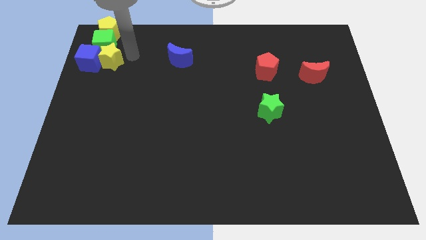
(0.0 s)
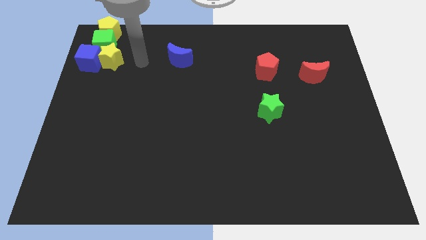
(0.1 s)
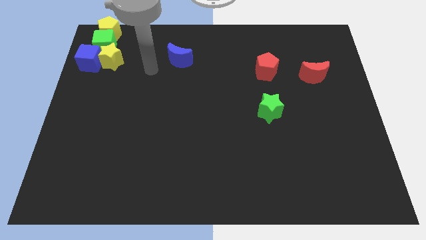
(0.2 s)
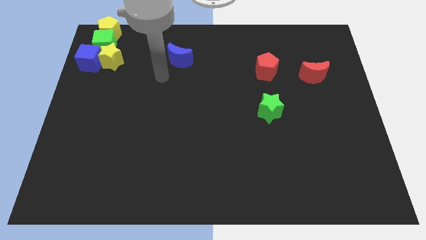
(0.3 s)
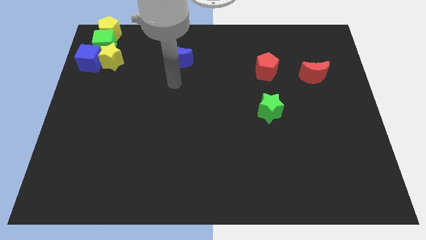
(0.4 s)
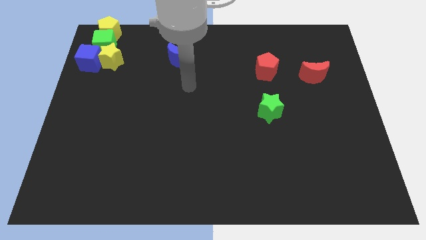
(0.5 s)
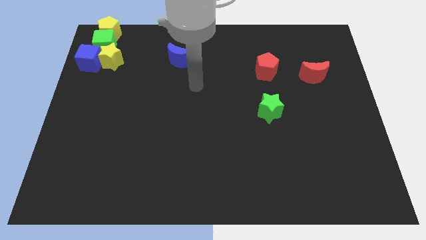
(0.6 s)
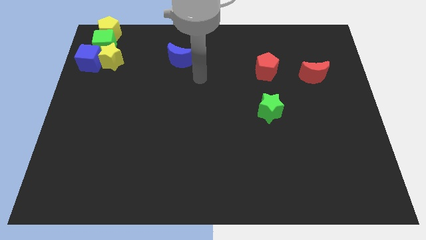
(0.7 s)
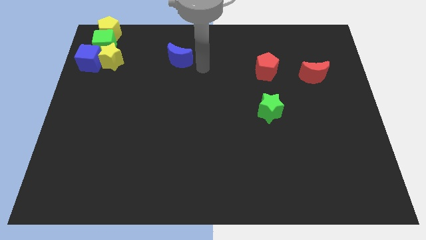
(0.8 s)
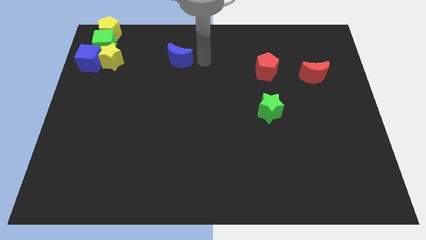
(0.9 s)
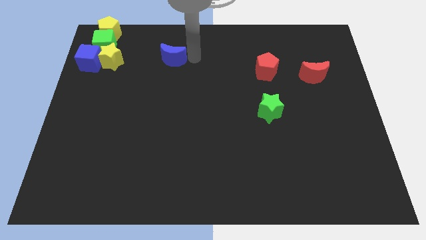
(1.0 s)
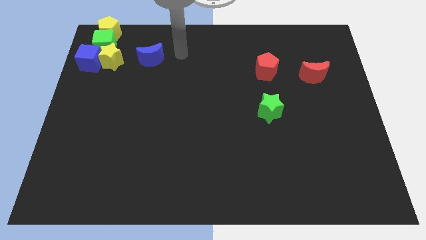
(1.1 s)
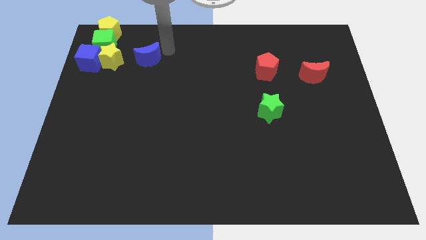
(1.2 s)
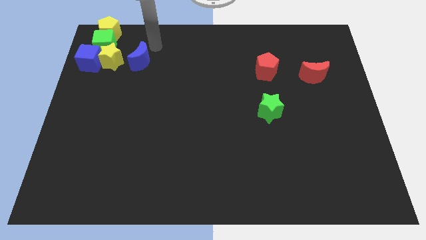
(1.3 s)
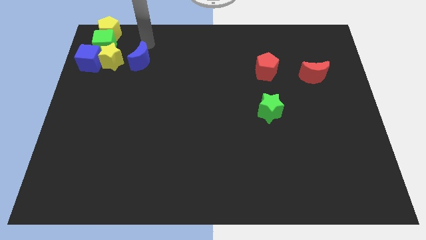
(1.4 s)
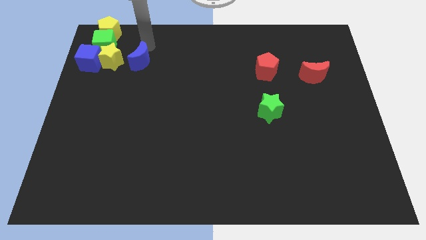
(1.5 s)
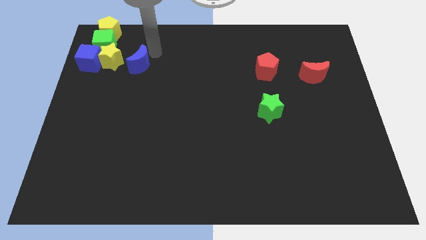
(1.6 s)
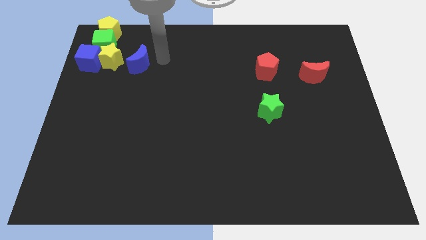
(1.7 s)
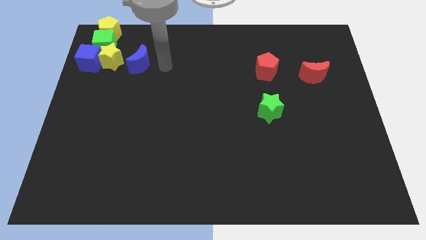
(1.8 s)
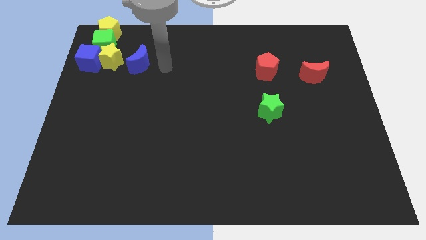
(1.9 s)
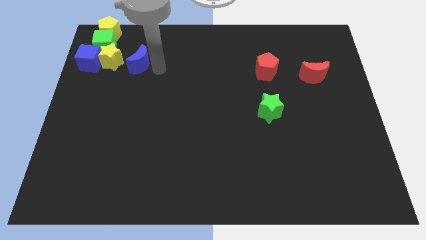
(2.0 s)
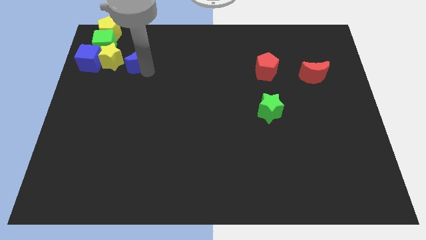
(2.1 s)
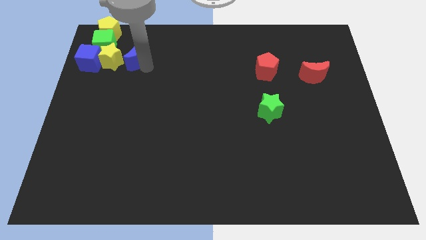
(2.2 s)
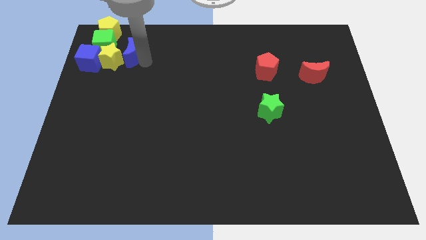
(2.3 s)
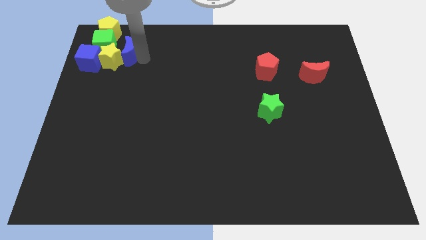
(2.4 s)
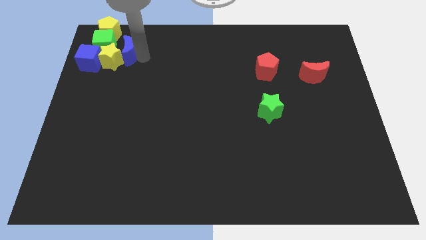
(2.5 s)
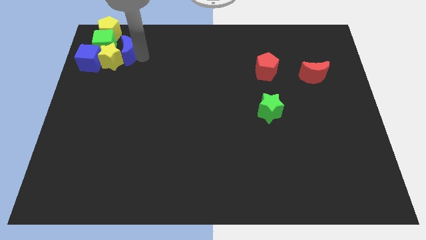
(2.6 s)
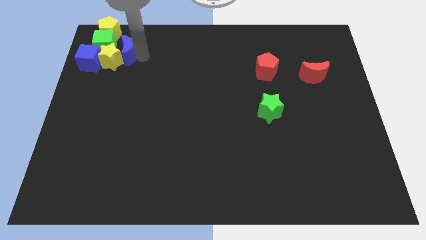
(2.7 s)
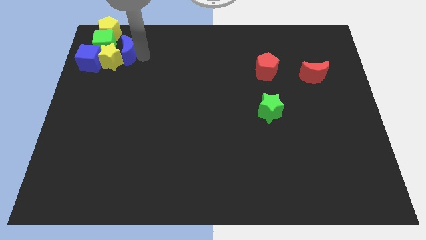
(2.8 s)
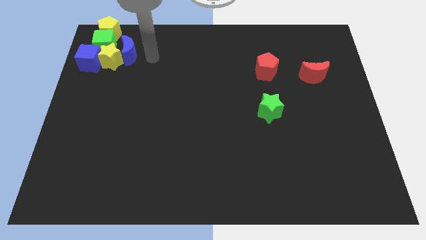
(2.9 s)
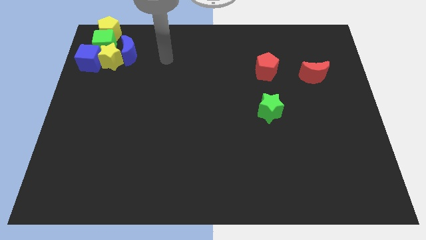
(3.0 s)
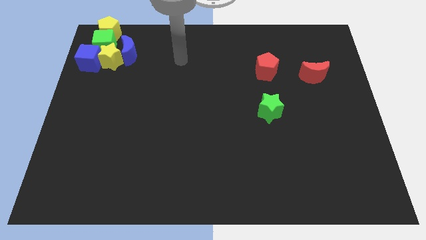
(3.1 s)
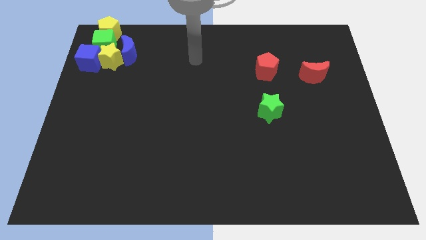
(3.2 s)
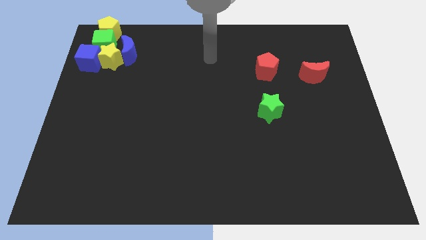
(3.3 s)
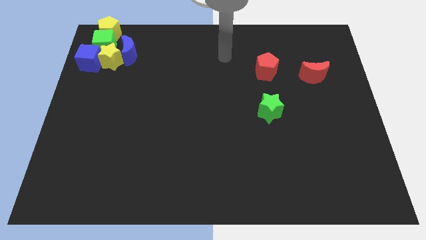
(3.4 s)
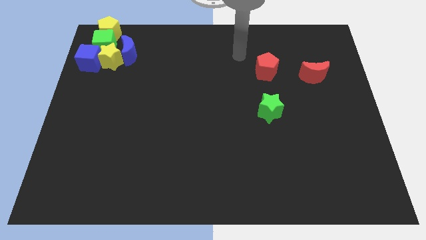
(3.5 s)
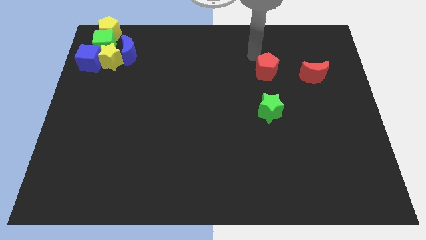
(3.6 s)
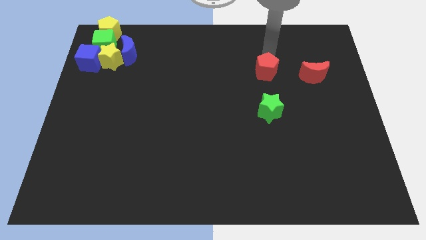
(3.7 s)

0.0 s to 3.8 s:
push the blue moon to the right side of the yellow star

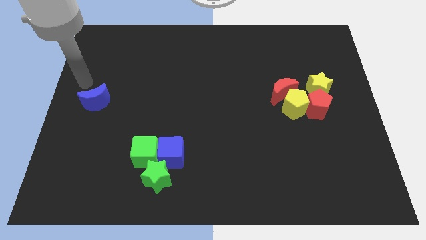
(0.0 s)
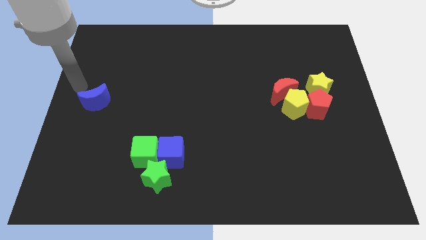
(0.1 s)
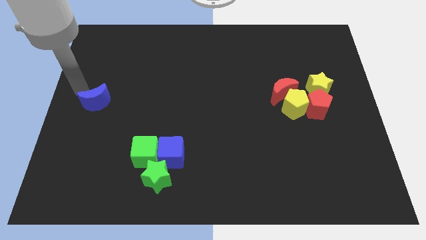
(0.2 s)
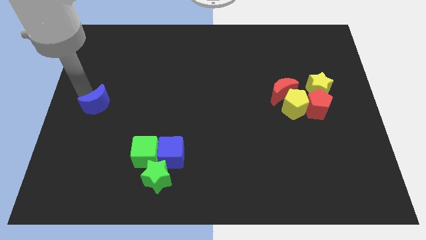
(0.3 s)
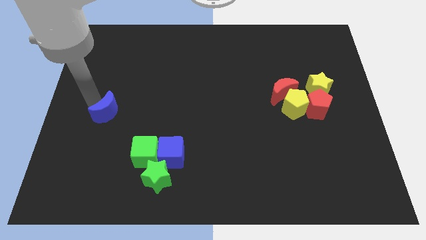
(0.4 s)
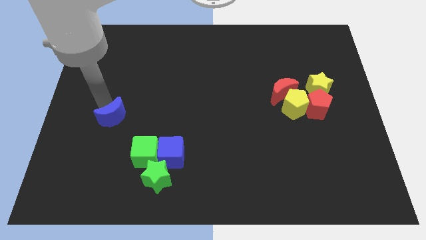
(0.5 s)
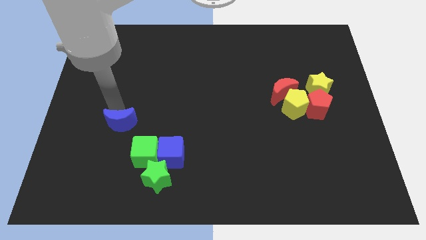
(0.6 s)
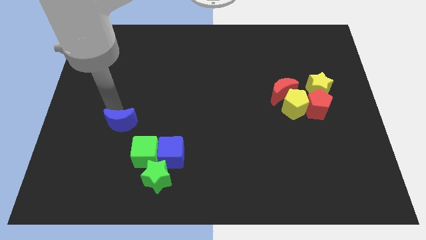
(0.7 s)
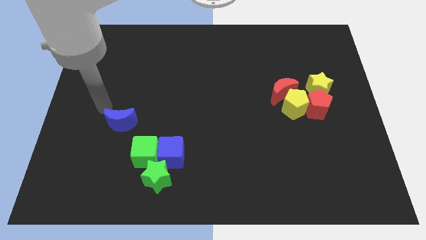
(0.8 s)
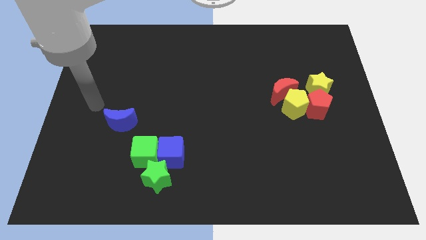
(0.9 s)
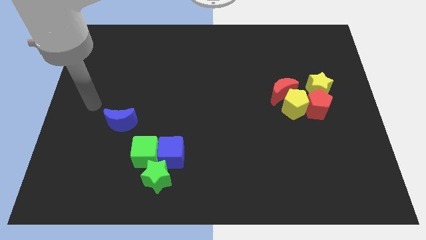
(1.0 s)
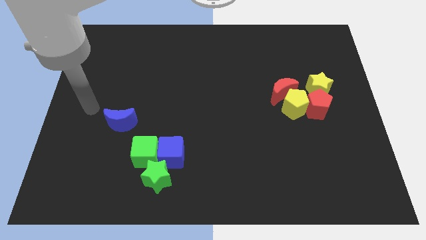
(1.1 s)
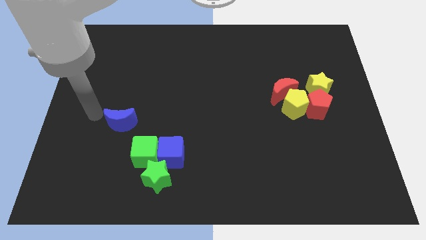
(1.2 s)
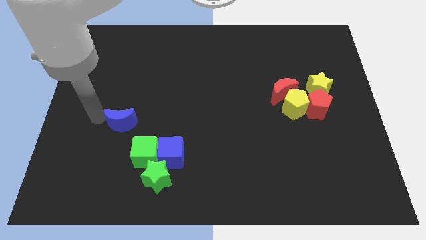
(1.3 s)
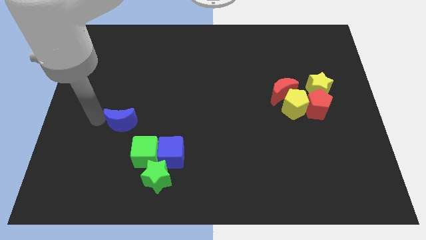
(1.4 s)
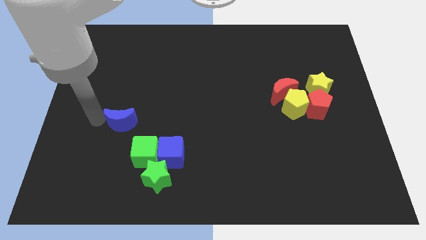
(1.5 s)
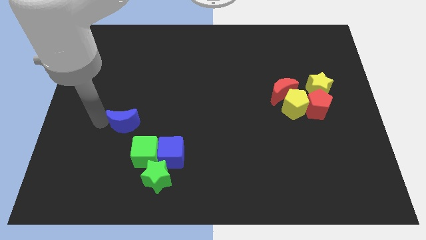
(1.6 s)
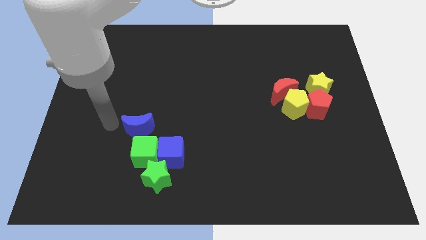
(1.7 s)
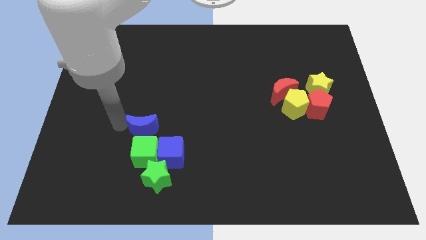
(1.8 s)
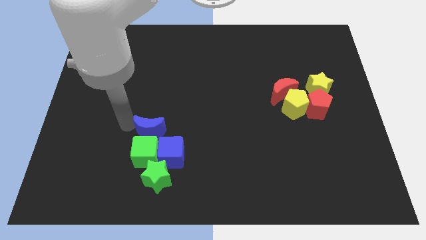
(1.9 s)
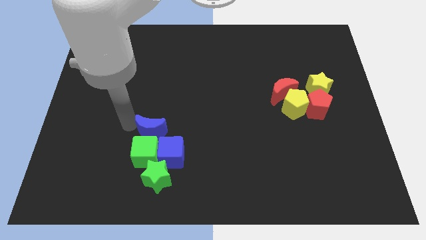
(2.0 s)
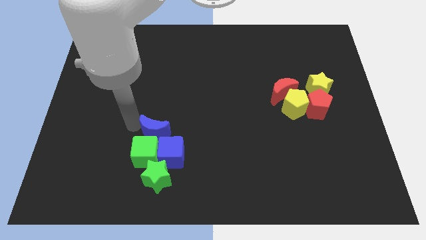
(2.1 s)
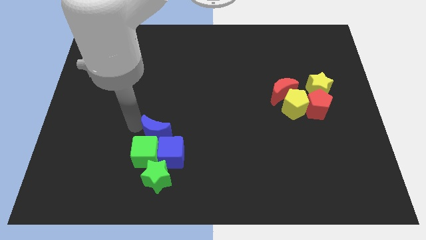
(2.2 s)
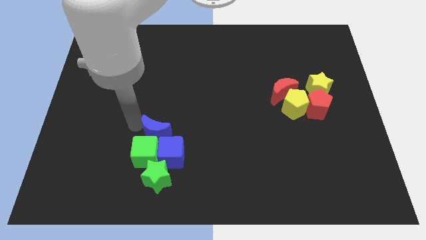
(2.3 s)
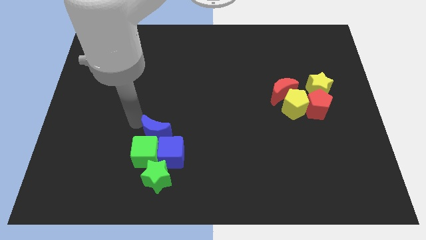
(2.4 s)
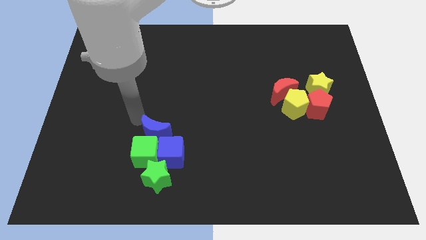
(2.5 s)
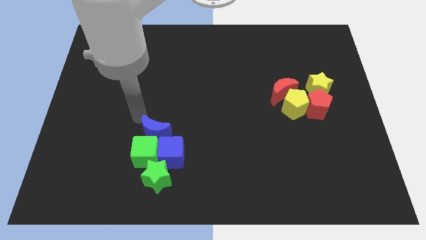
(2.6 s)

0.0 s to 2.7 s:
move the blue moon to the top of blue cube and green cube

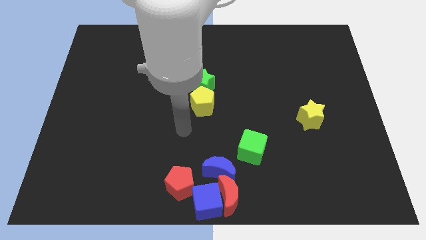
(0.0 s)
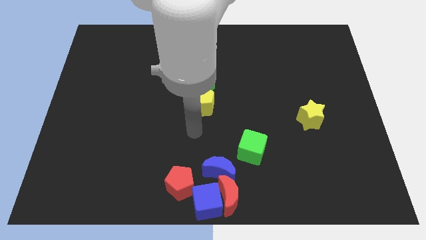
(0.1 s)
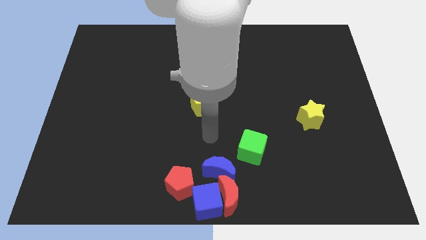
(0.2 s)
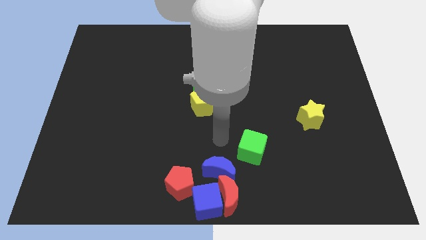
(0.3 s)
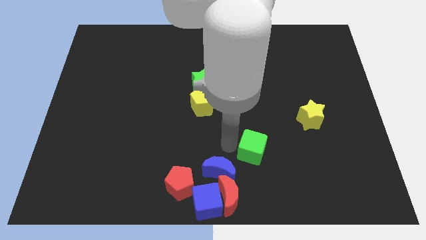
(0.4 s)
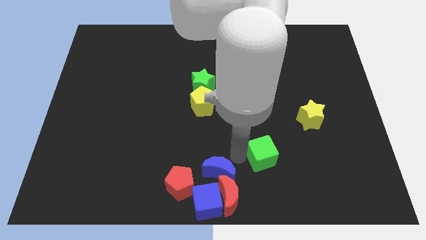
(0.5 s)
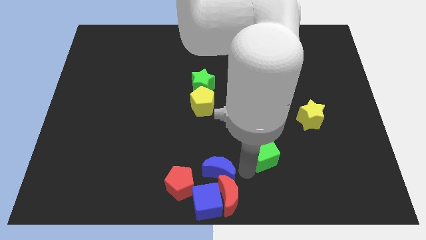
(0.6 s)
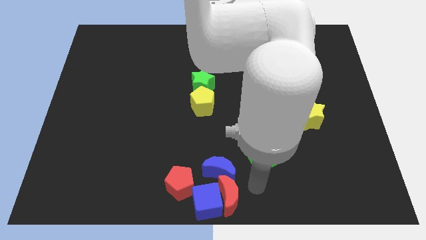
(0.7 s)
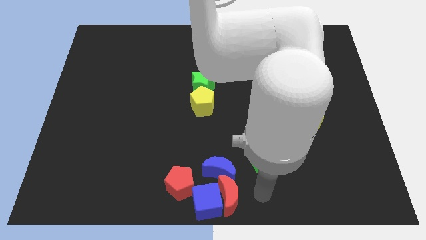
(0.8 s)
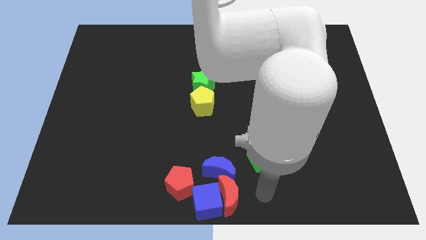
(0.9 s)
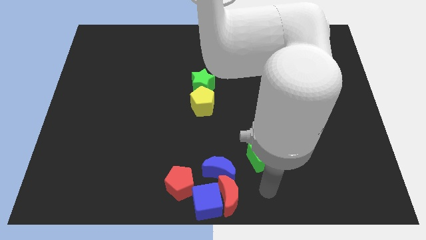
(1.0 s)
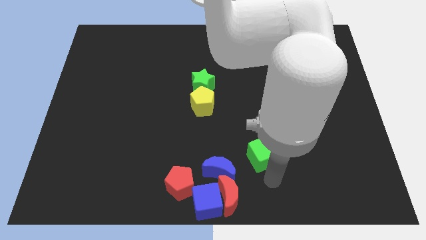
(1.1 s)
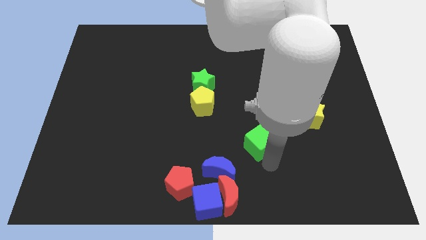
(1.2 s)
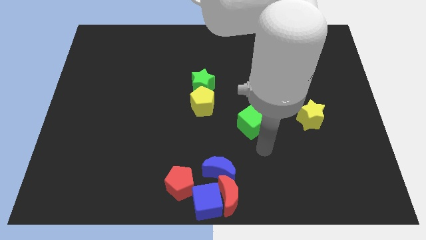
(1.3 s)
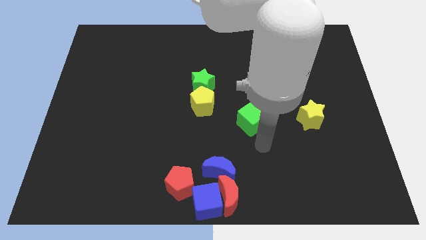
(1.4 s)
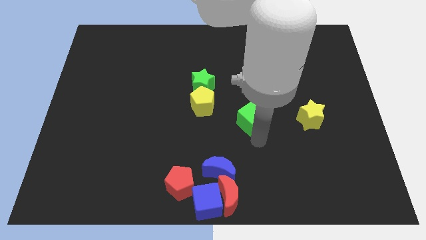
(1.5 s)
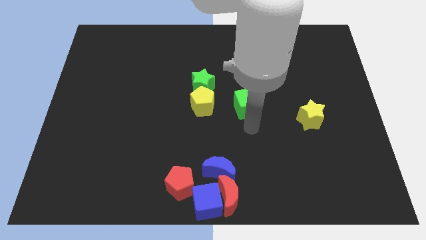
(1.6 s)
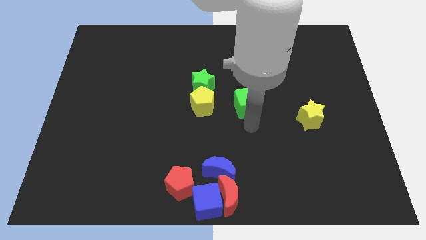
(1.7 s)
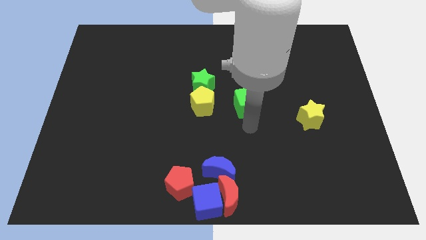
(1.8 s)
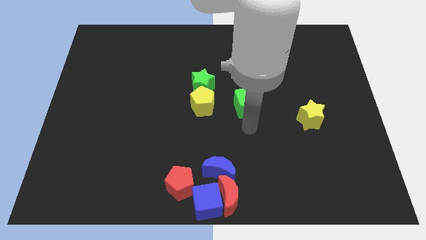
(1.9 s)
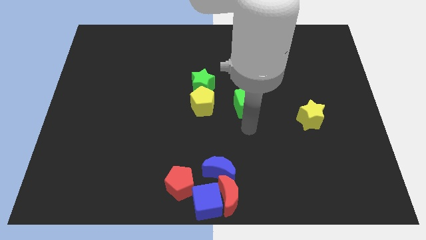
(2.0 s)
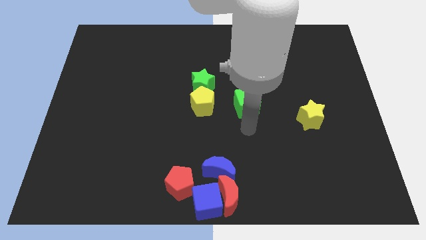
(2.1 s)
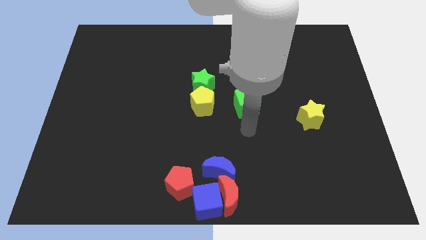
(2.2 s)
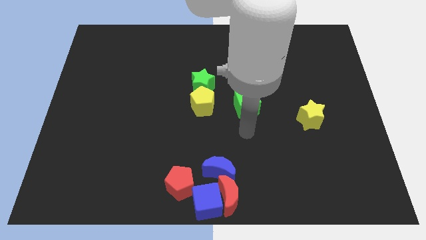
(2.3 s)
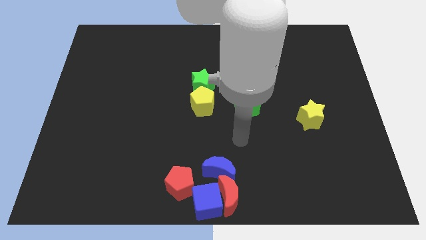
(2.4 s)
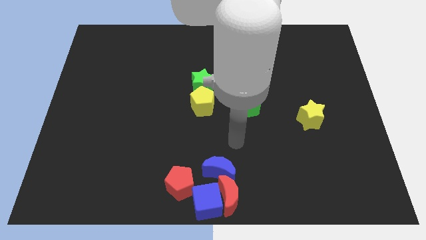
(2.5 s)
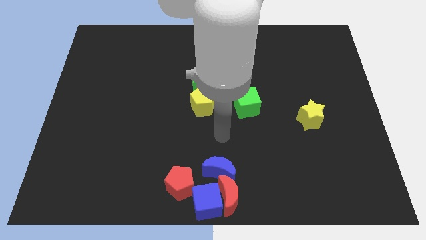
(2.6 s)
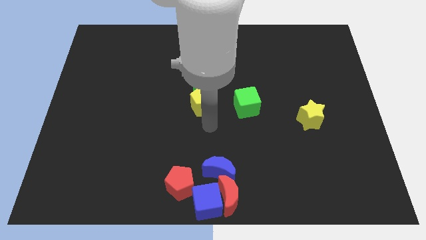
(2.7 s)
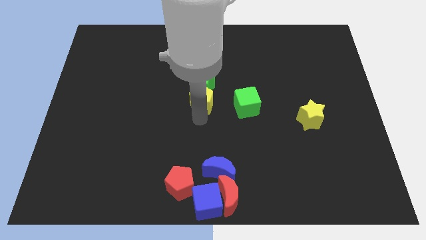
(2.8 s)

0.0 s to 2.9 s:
push the green cube to the center of the board
